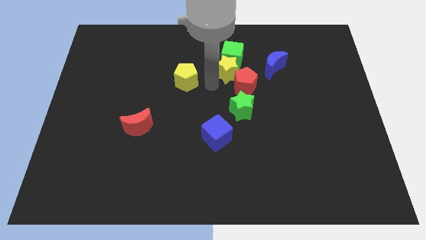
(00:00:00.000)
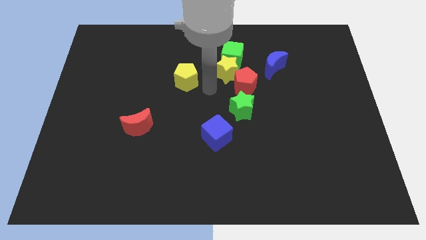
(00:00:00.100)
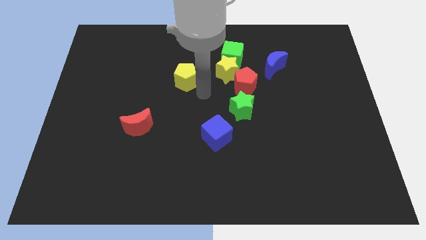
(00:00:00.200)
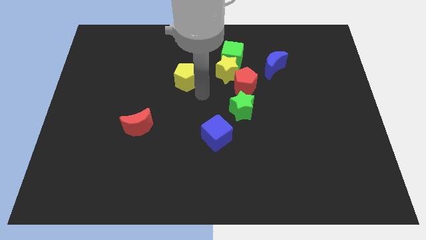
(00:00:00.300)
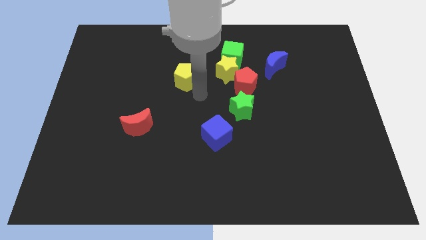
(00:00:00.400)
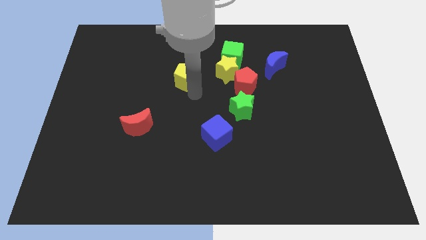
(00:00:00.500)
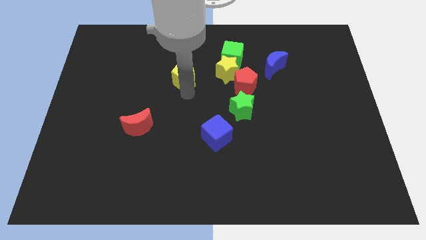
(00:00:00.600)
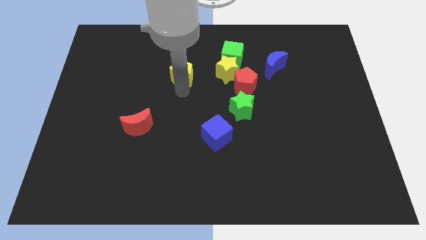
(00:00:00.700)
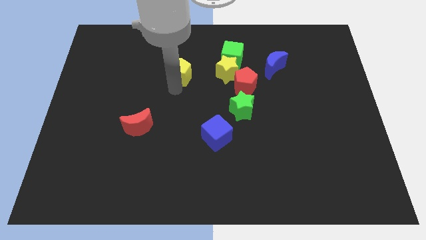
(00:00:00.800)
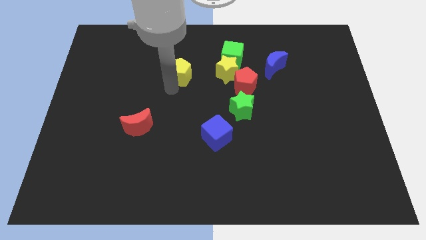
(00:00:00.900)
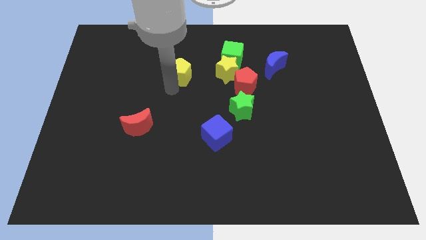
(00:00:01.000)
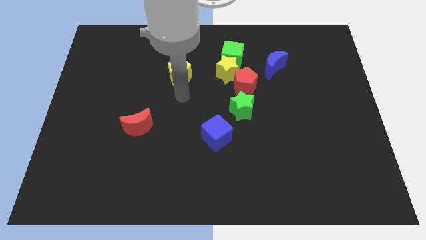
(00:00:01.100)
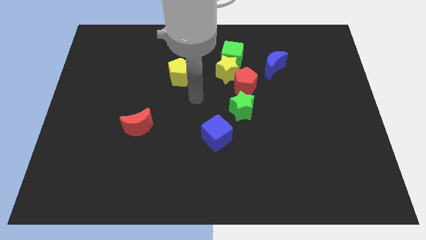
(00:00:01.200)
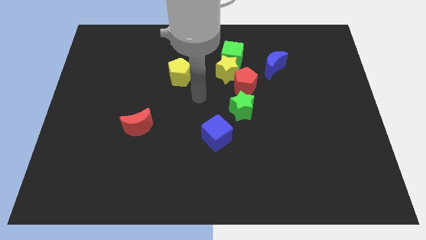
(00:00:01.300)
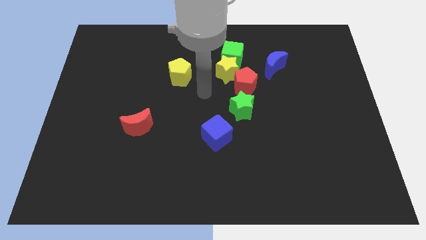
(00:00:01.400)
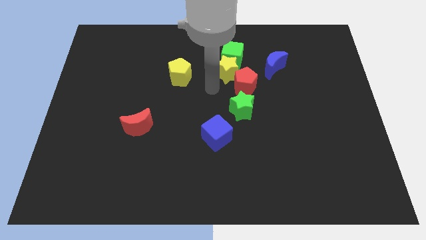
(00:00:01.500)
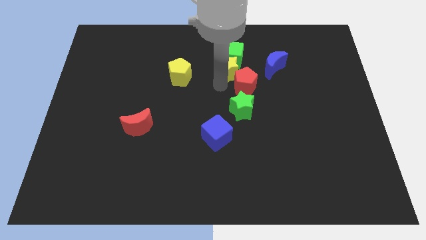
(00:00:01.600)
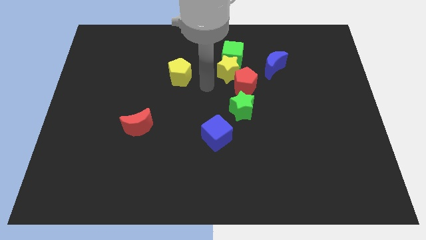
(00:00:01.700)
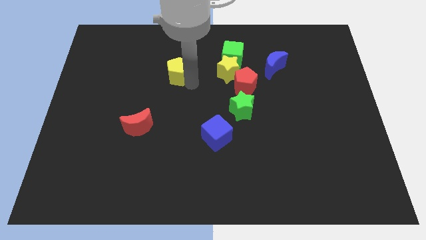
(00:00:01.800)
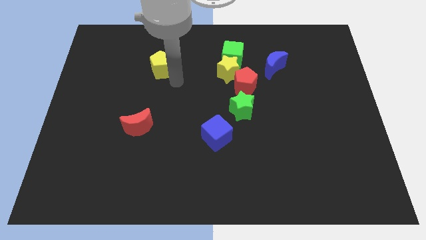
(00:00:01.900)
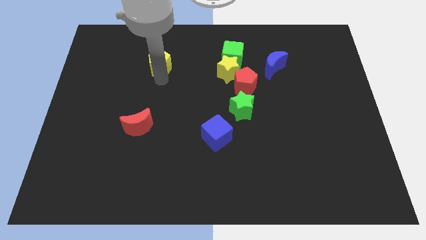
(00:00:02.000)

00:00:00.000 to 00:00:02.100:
move the yellow pentagon to the left of the yellow star

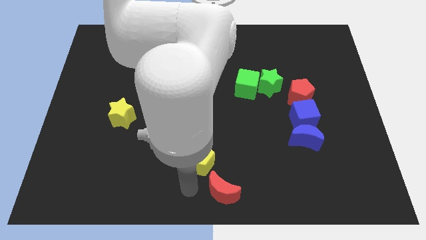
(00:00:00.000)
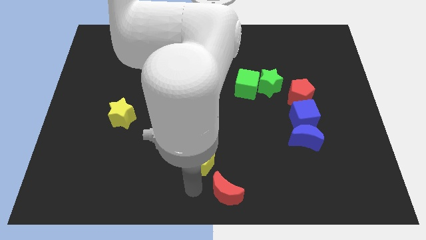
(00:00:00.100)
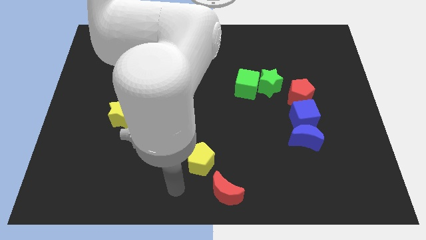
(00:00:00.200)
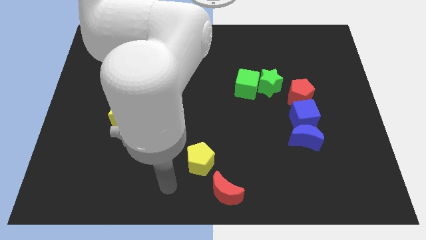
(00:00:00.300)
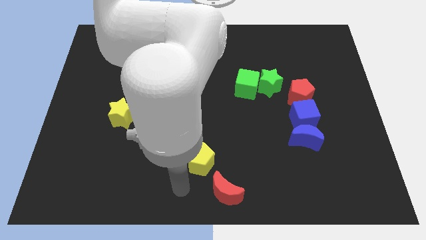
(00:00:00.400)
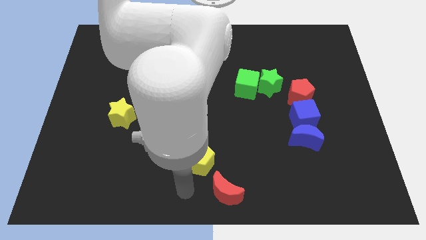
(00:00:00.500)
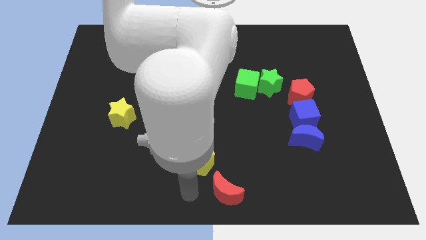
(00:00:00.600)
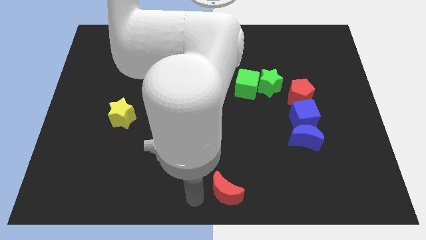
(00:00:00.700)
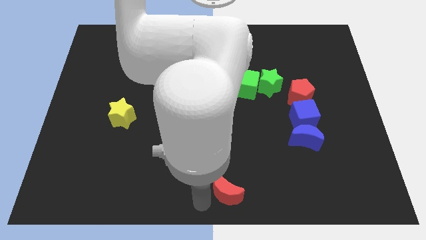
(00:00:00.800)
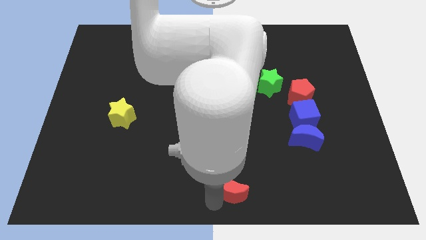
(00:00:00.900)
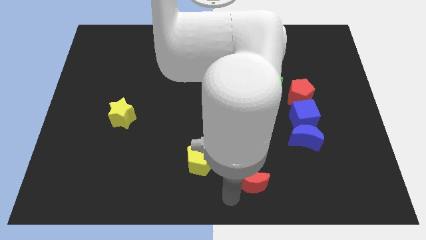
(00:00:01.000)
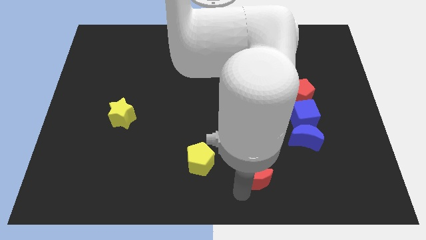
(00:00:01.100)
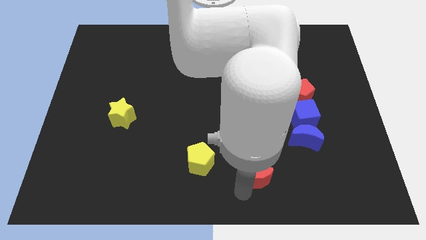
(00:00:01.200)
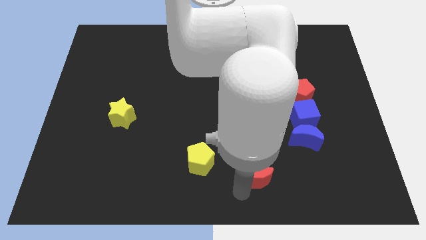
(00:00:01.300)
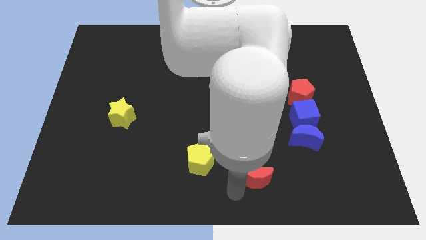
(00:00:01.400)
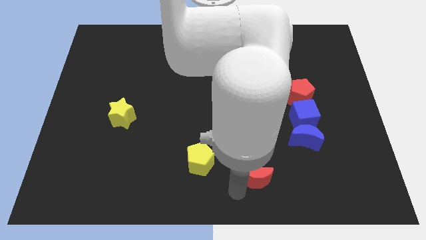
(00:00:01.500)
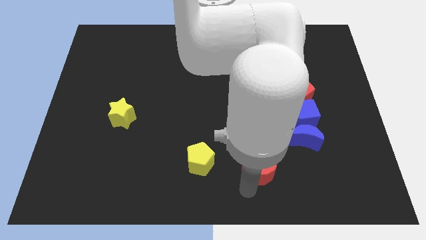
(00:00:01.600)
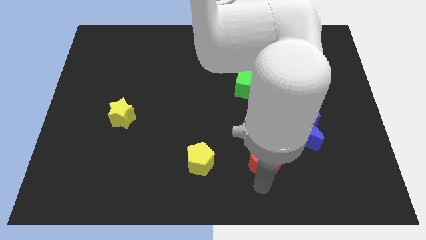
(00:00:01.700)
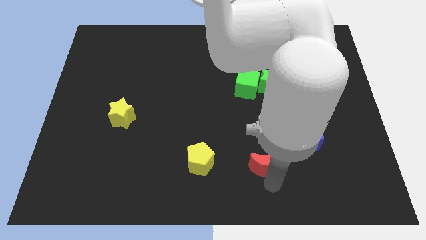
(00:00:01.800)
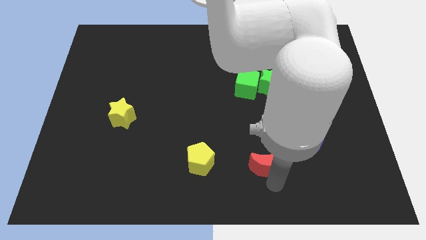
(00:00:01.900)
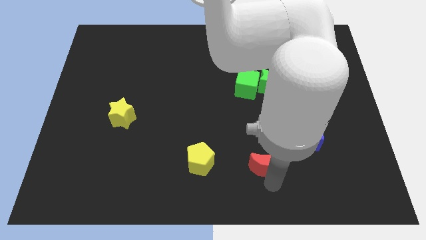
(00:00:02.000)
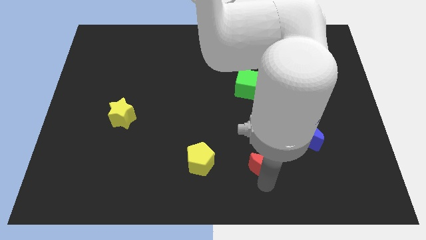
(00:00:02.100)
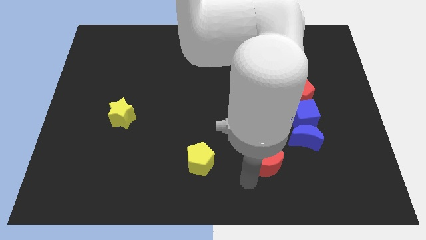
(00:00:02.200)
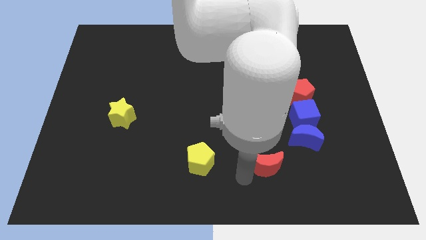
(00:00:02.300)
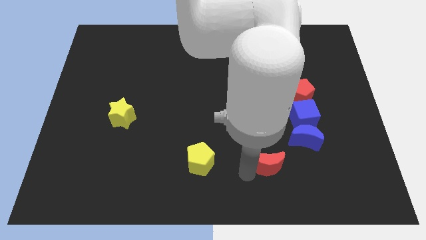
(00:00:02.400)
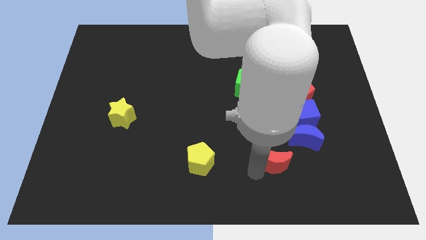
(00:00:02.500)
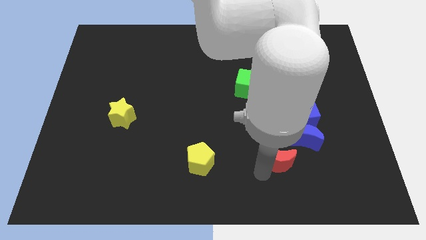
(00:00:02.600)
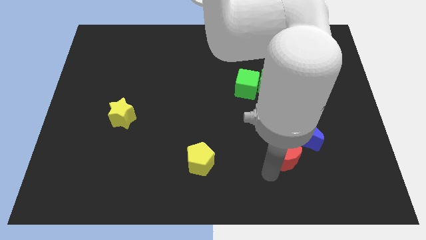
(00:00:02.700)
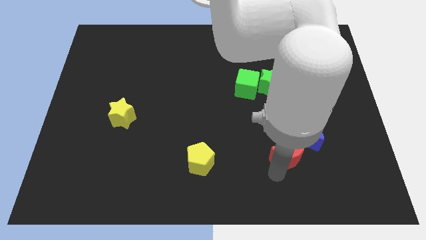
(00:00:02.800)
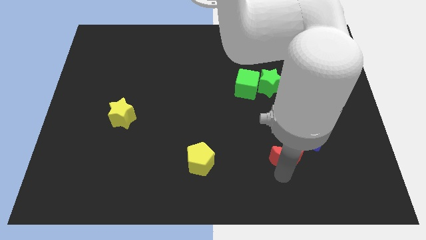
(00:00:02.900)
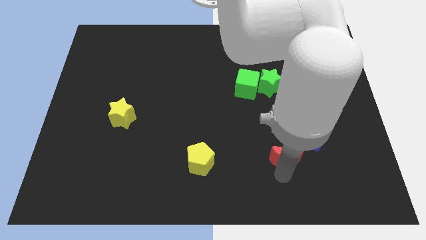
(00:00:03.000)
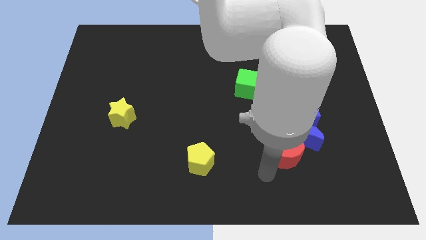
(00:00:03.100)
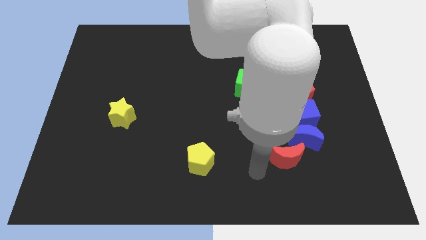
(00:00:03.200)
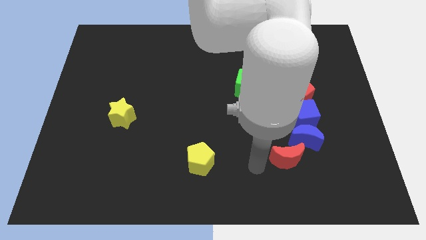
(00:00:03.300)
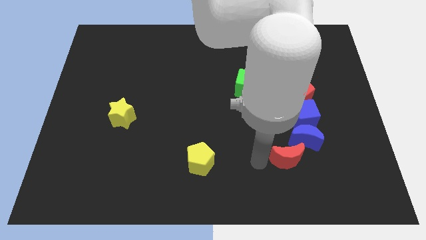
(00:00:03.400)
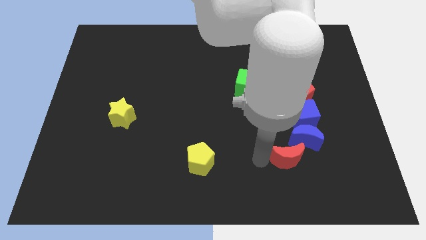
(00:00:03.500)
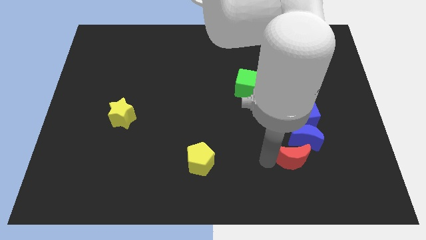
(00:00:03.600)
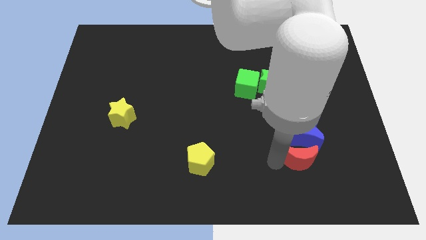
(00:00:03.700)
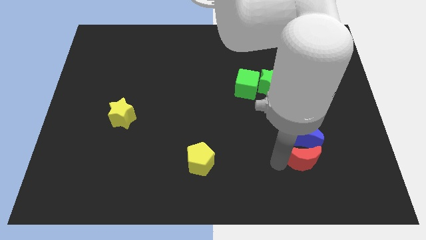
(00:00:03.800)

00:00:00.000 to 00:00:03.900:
move the red moon down to the blue moon

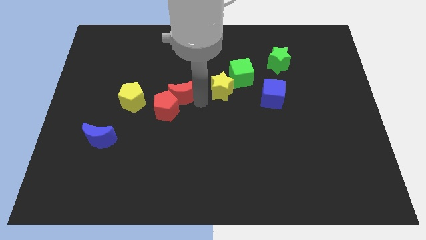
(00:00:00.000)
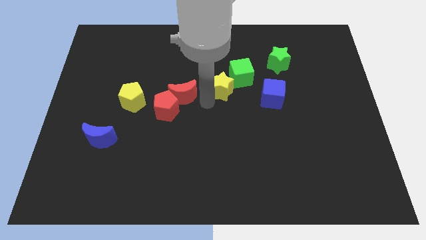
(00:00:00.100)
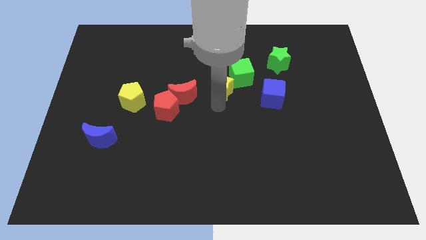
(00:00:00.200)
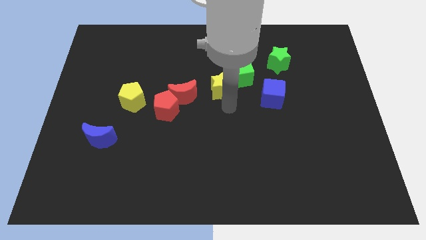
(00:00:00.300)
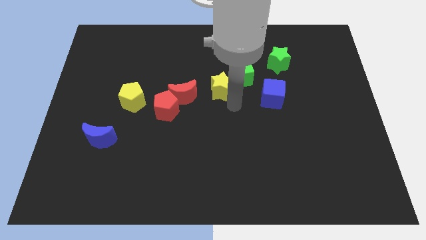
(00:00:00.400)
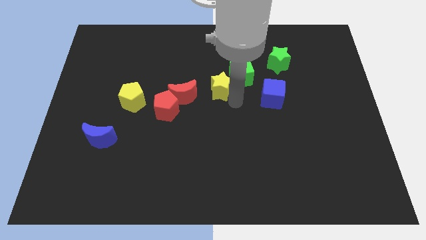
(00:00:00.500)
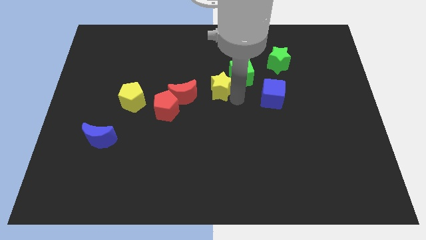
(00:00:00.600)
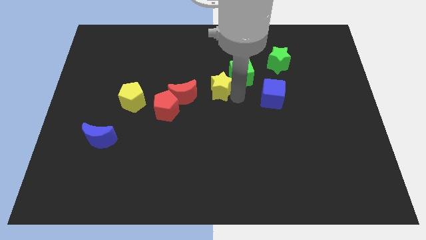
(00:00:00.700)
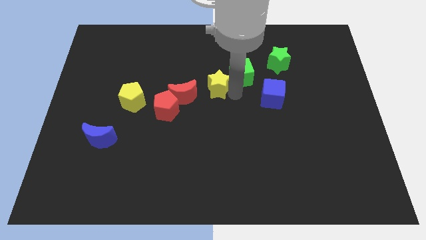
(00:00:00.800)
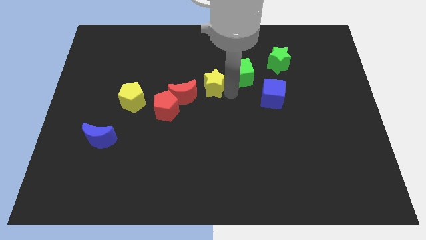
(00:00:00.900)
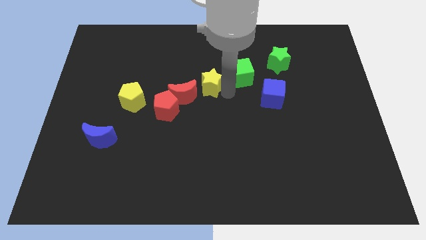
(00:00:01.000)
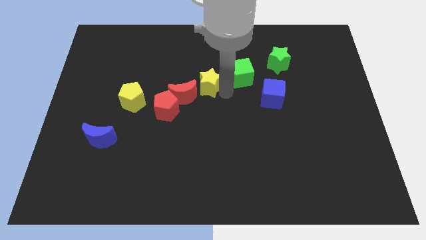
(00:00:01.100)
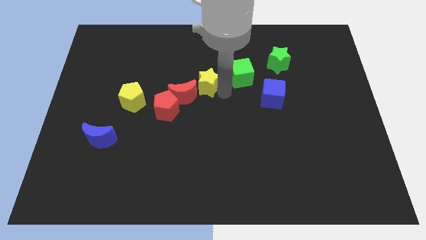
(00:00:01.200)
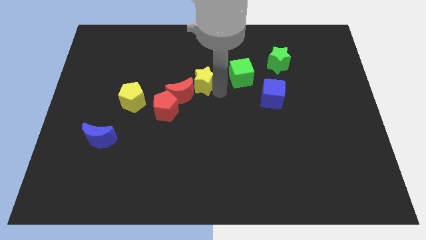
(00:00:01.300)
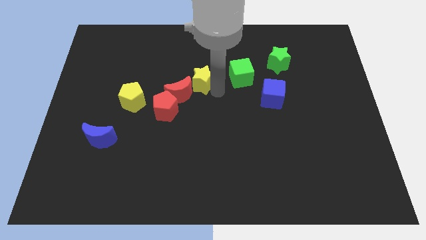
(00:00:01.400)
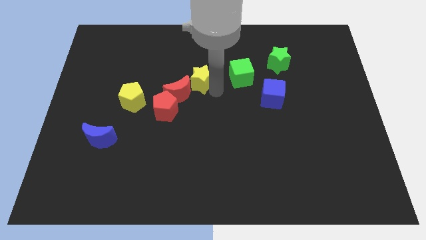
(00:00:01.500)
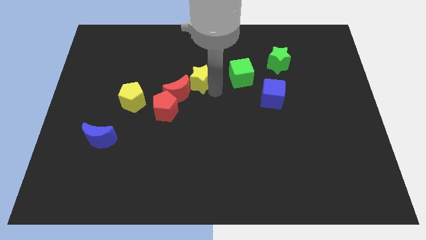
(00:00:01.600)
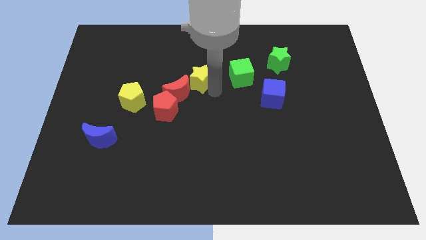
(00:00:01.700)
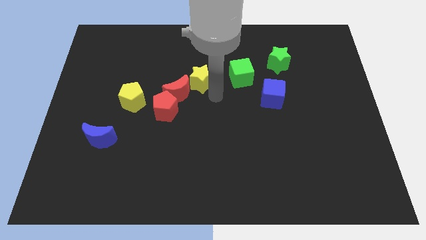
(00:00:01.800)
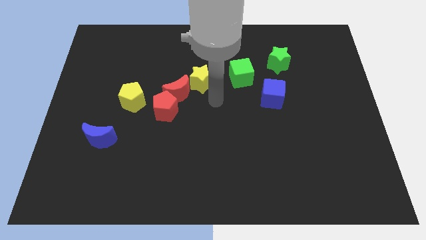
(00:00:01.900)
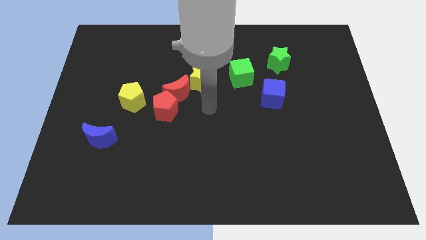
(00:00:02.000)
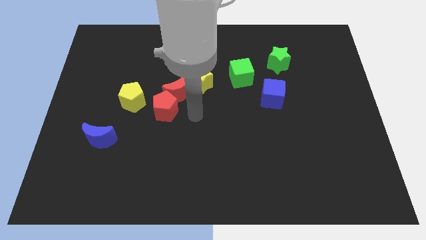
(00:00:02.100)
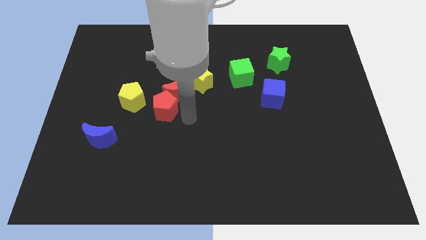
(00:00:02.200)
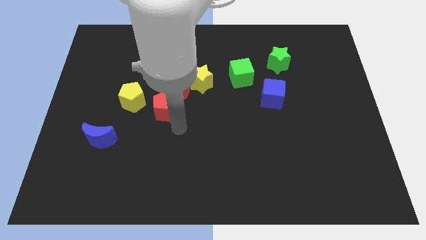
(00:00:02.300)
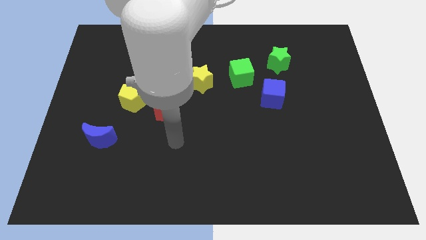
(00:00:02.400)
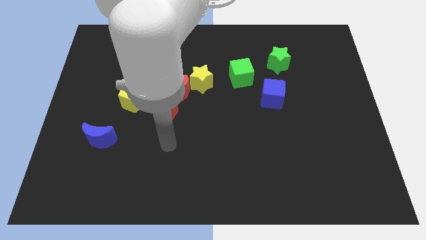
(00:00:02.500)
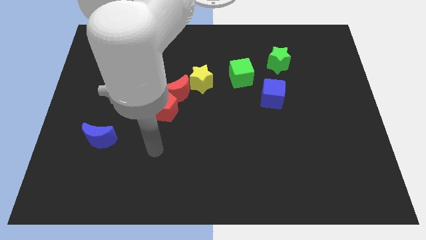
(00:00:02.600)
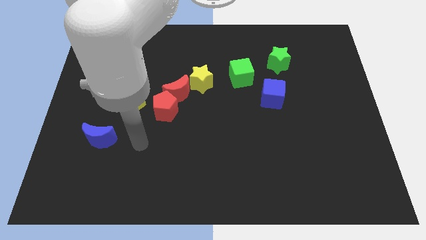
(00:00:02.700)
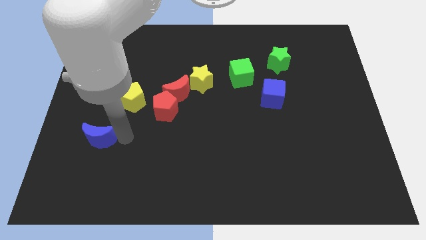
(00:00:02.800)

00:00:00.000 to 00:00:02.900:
move the yellow star right to the red crescent

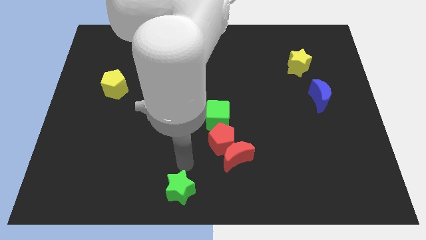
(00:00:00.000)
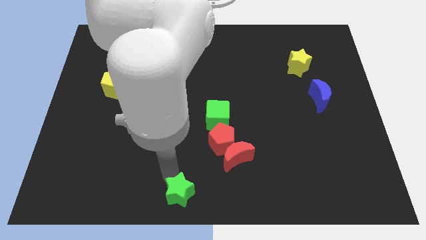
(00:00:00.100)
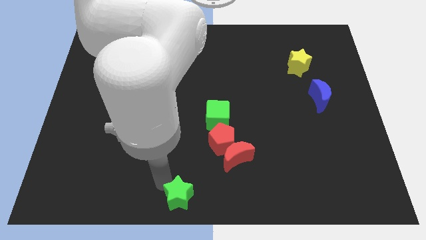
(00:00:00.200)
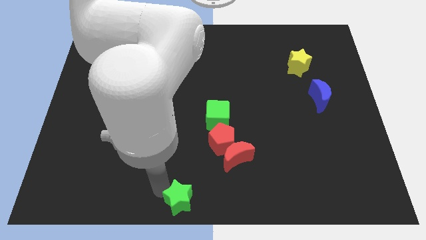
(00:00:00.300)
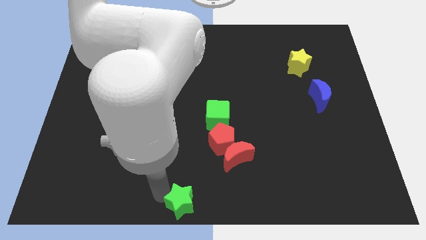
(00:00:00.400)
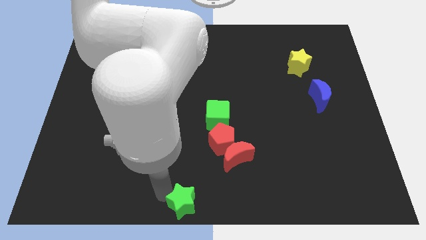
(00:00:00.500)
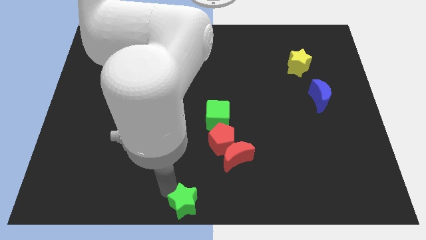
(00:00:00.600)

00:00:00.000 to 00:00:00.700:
place the green star to the bottom center
